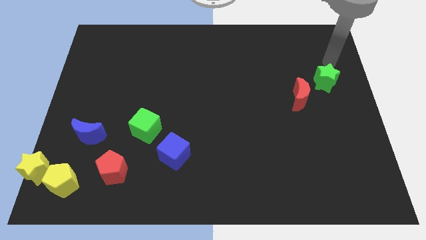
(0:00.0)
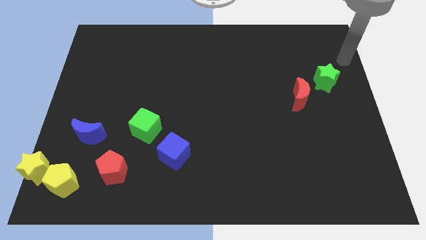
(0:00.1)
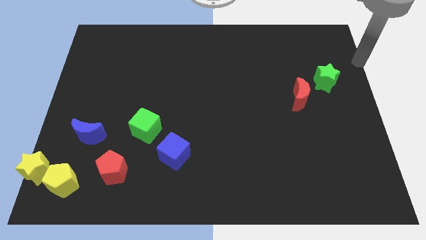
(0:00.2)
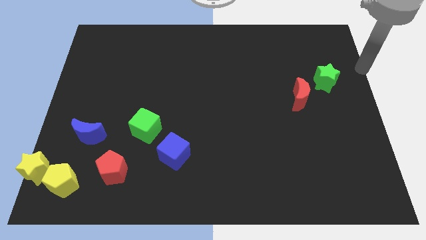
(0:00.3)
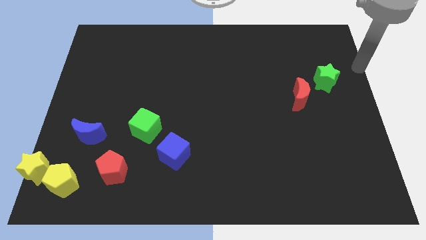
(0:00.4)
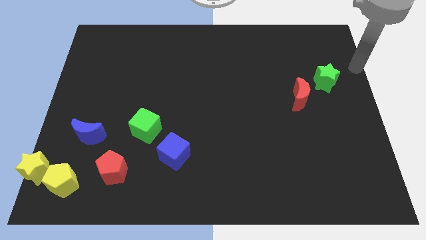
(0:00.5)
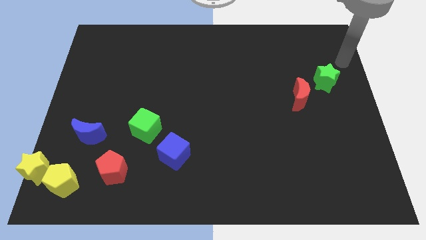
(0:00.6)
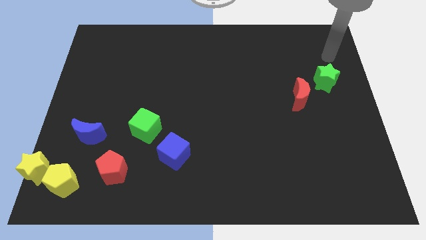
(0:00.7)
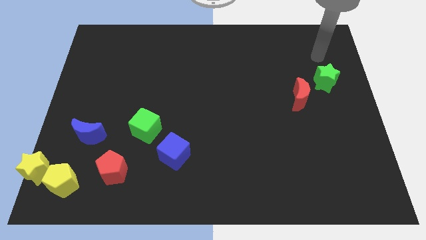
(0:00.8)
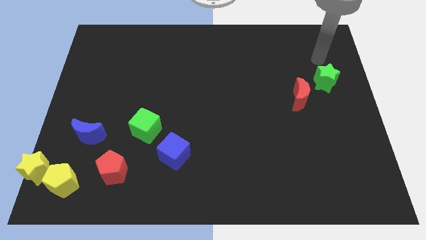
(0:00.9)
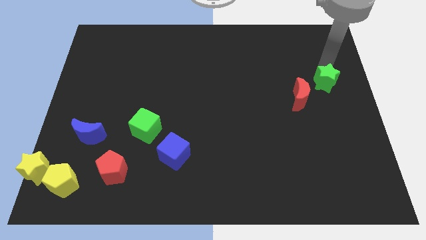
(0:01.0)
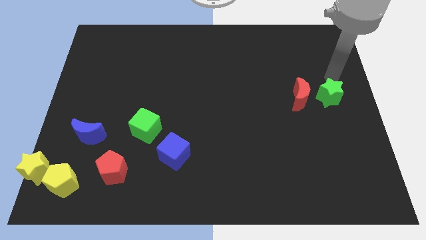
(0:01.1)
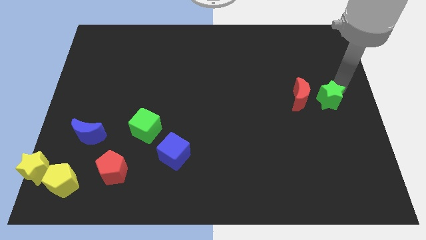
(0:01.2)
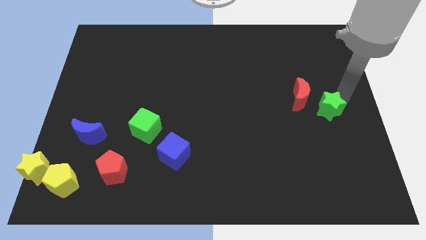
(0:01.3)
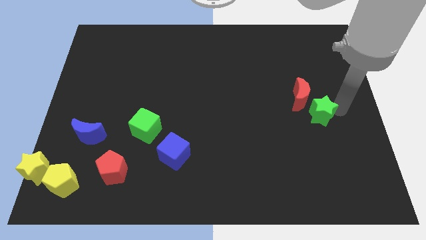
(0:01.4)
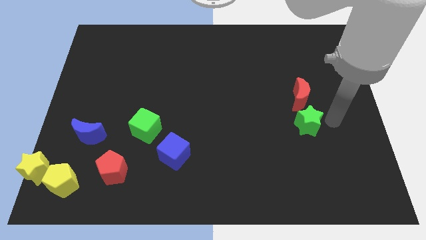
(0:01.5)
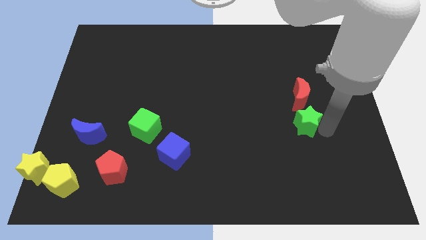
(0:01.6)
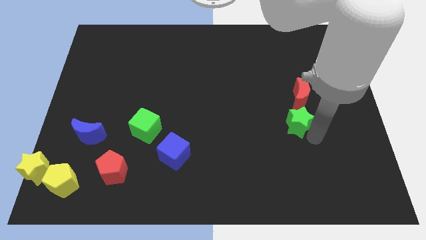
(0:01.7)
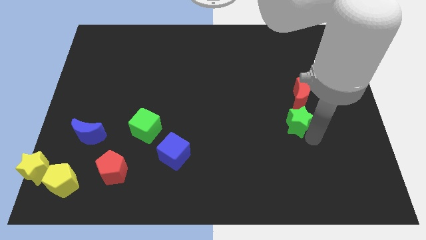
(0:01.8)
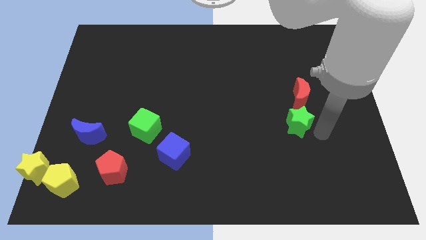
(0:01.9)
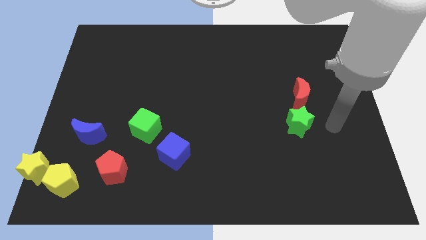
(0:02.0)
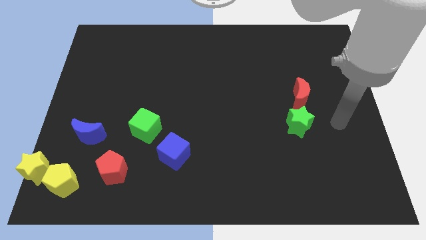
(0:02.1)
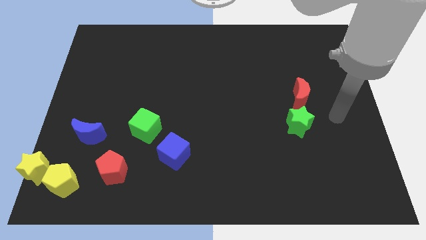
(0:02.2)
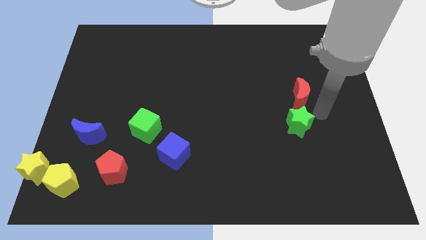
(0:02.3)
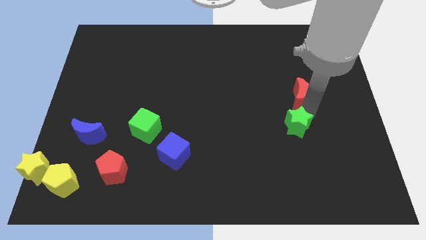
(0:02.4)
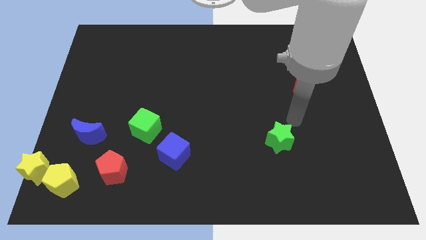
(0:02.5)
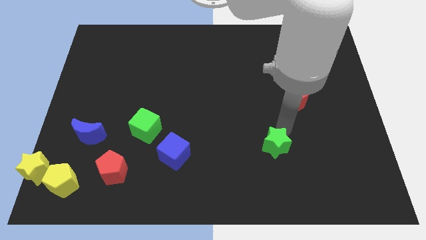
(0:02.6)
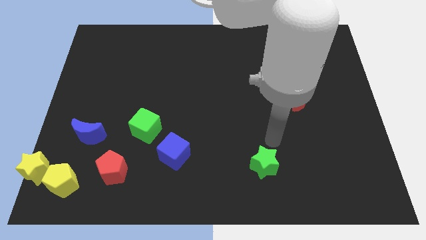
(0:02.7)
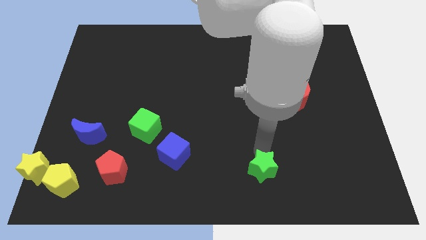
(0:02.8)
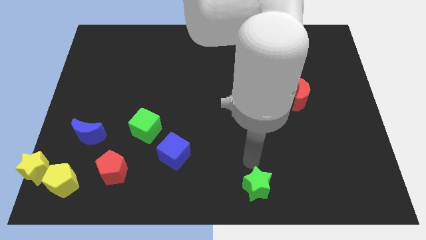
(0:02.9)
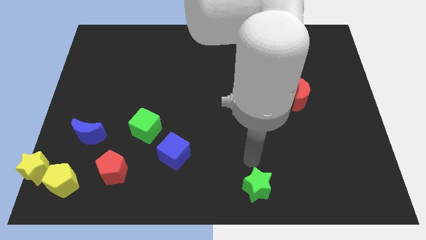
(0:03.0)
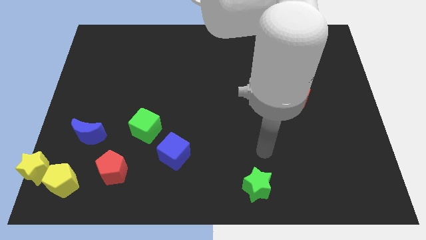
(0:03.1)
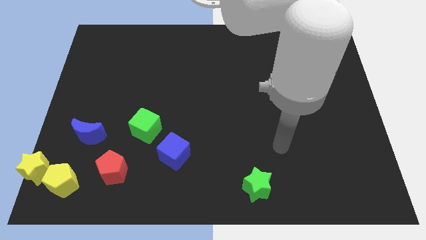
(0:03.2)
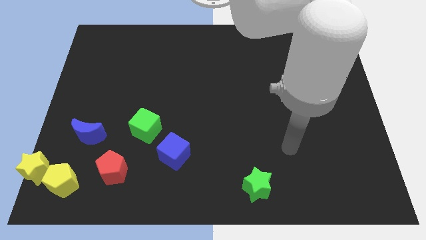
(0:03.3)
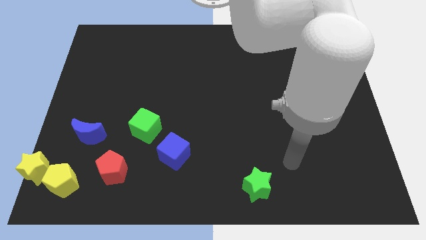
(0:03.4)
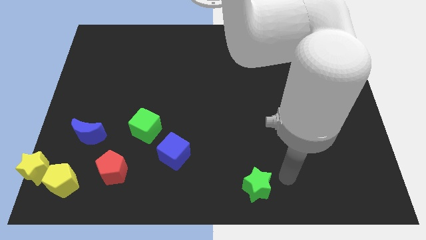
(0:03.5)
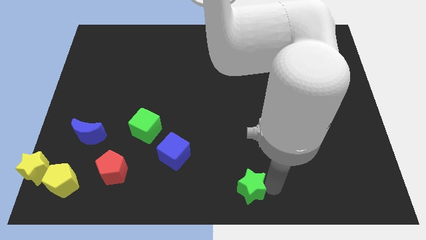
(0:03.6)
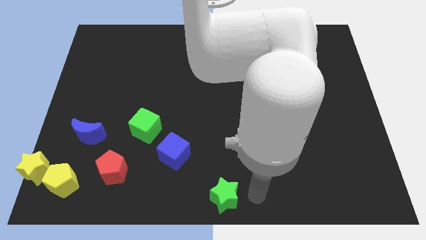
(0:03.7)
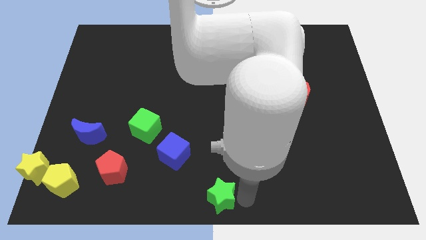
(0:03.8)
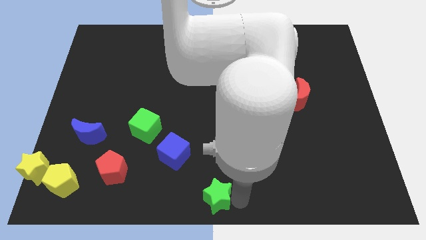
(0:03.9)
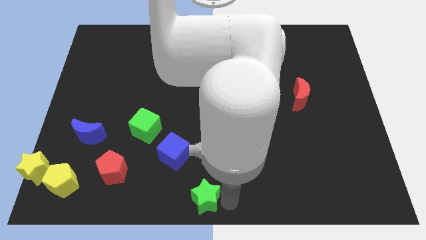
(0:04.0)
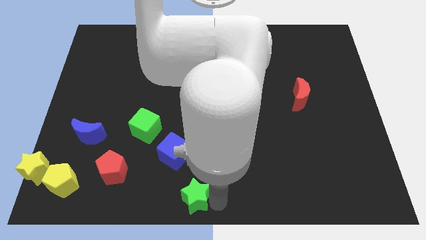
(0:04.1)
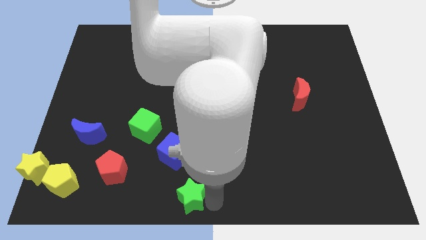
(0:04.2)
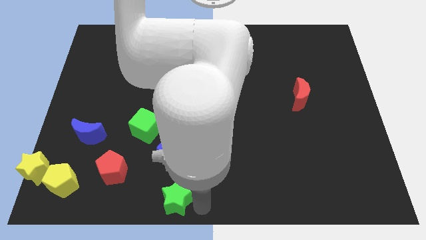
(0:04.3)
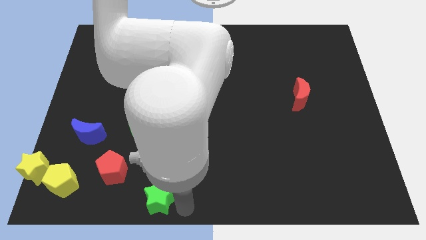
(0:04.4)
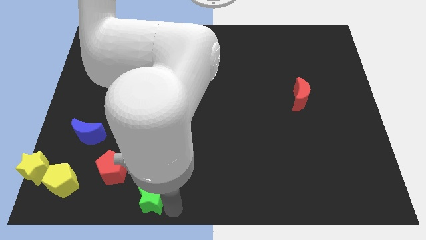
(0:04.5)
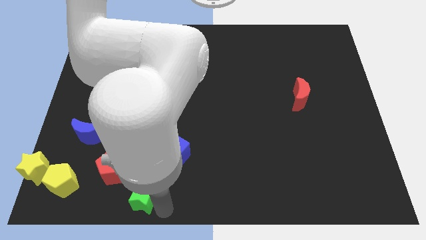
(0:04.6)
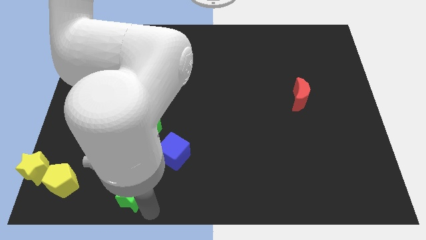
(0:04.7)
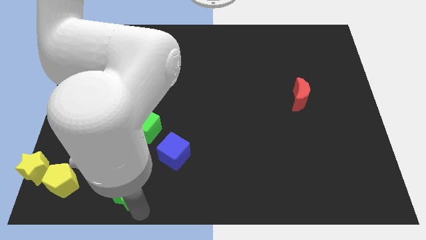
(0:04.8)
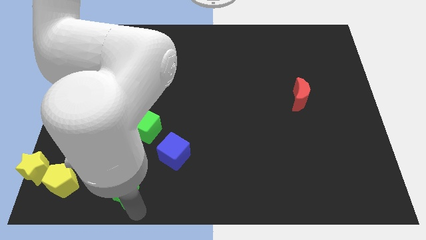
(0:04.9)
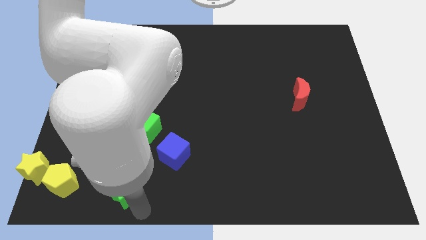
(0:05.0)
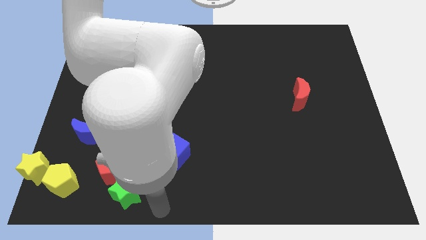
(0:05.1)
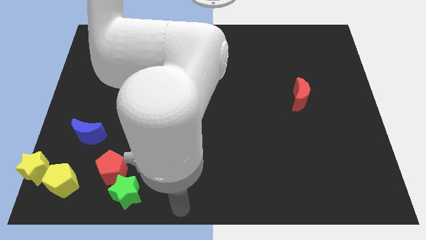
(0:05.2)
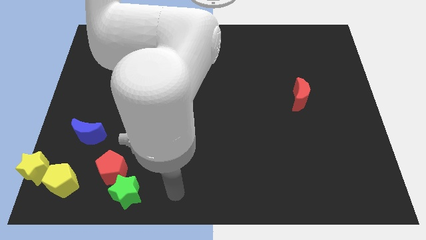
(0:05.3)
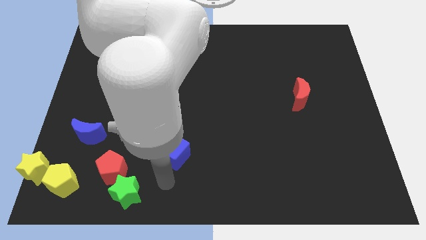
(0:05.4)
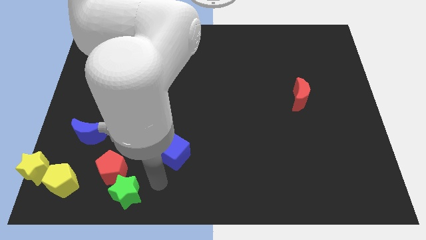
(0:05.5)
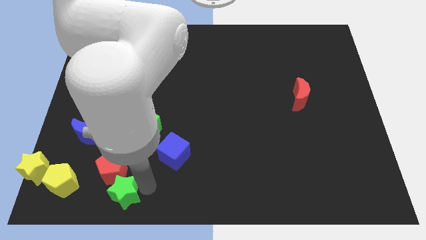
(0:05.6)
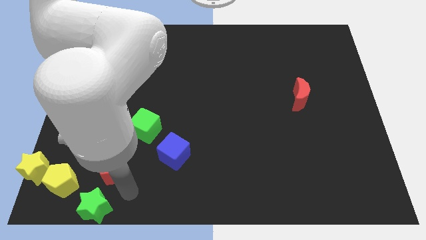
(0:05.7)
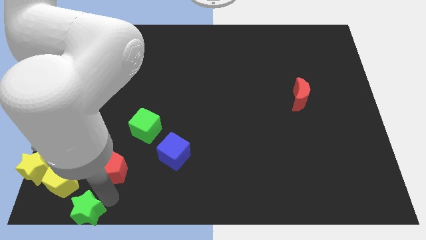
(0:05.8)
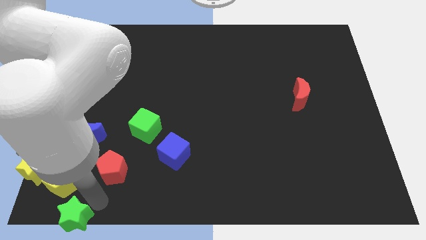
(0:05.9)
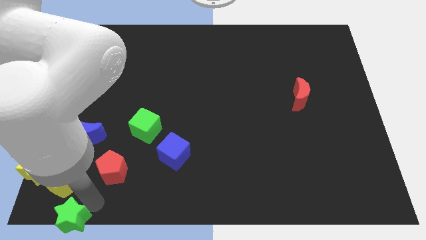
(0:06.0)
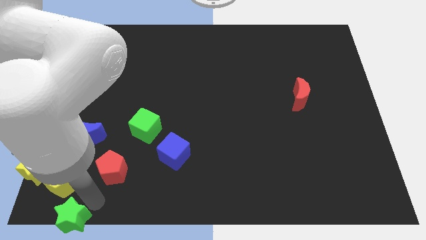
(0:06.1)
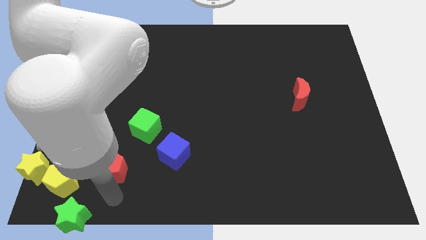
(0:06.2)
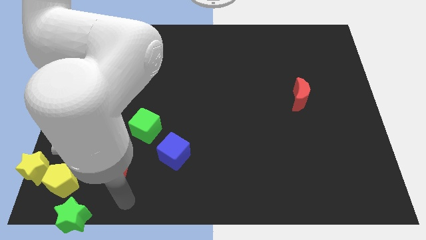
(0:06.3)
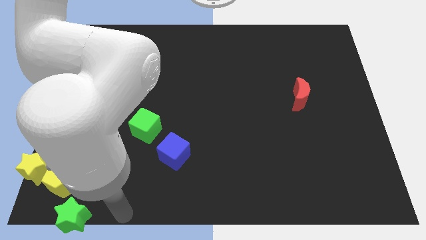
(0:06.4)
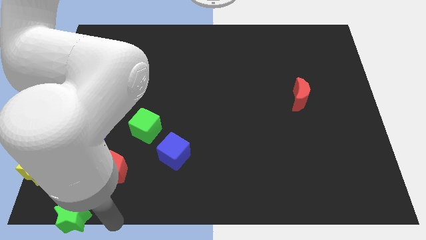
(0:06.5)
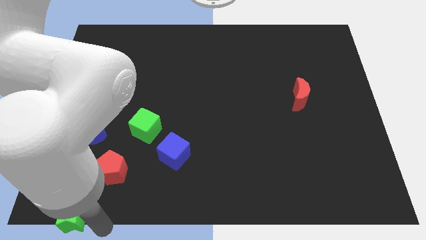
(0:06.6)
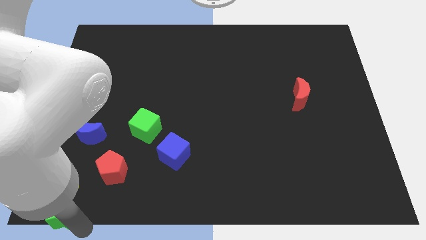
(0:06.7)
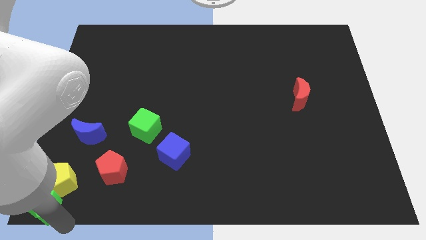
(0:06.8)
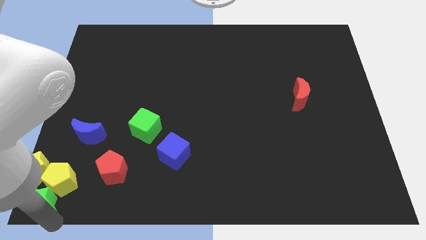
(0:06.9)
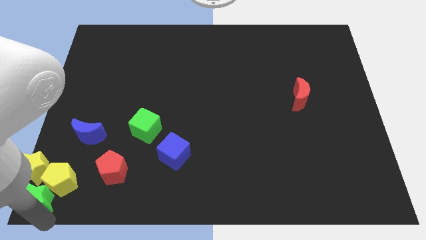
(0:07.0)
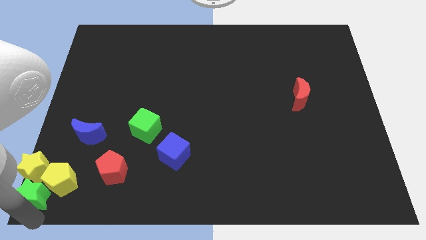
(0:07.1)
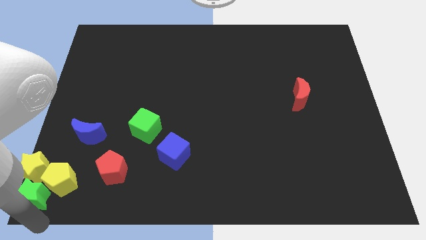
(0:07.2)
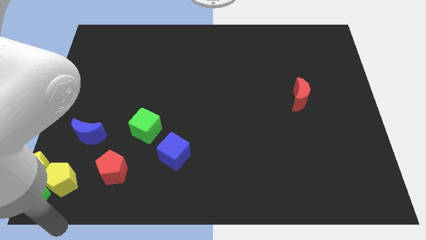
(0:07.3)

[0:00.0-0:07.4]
push the green star down to the bottom left corner of the board

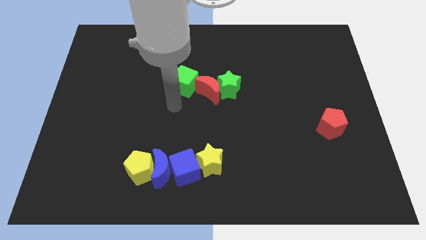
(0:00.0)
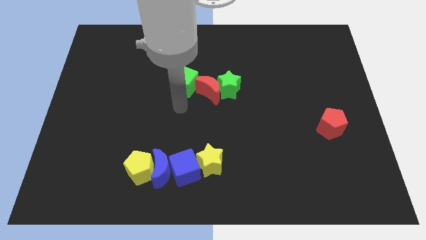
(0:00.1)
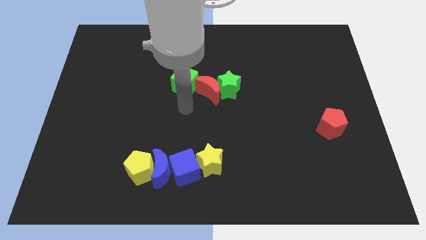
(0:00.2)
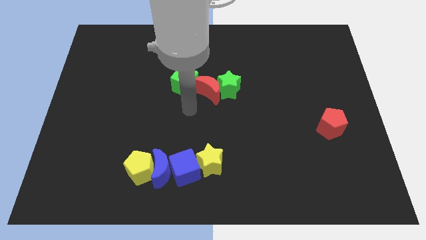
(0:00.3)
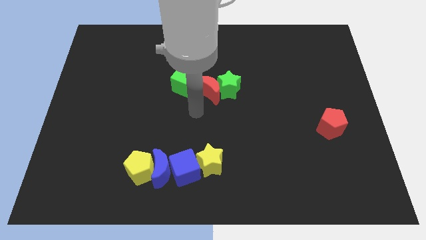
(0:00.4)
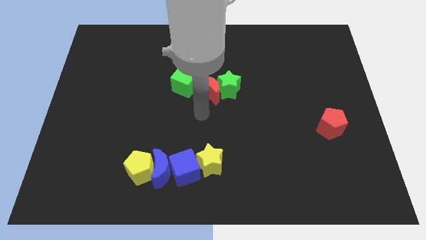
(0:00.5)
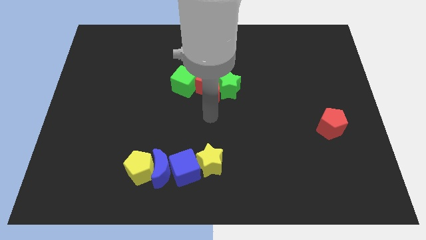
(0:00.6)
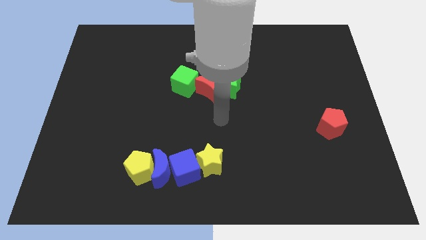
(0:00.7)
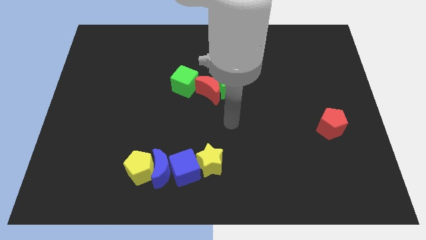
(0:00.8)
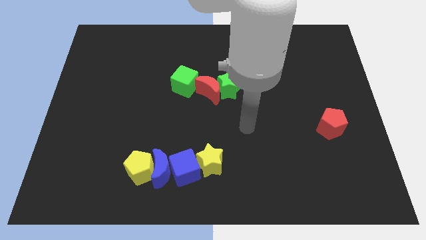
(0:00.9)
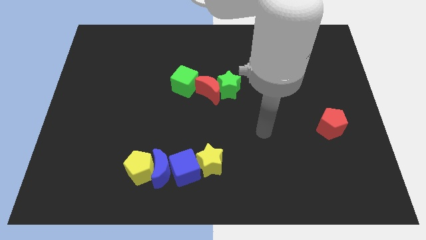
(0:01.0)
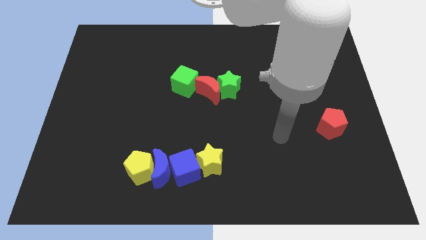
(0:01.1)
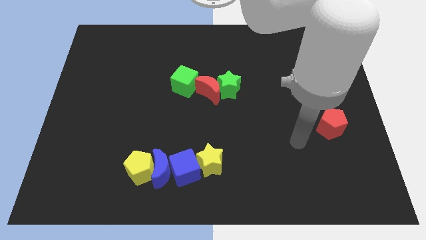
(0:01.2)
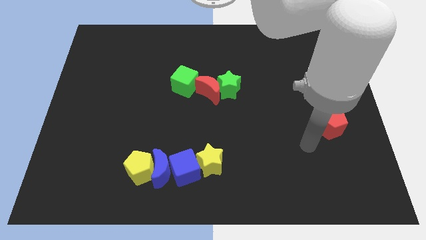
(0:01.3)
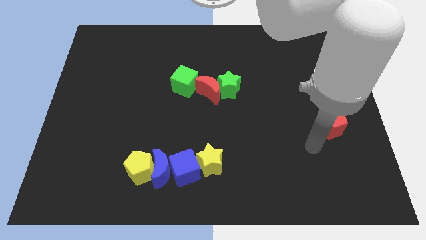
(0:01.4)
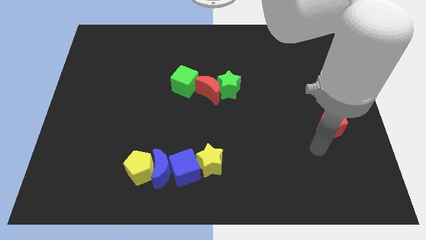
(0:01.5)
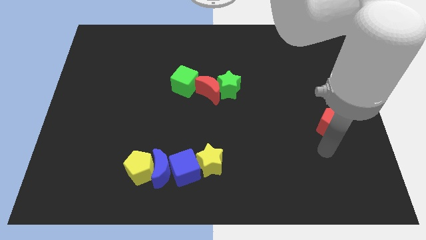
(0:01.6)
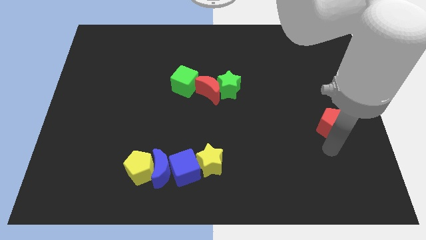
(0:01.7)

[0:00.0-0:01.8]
move your hand below the red pentagon
